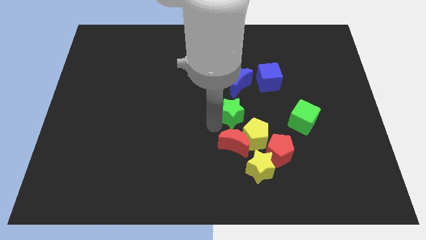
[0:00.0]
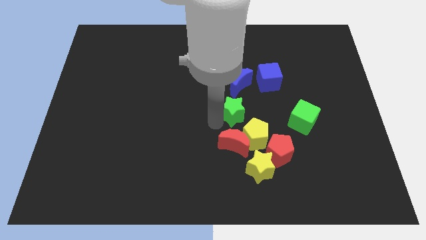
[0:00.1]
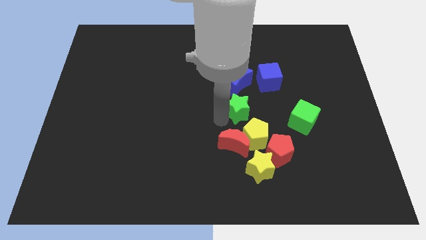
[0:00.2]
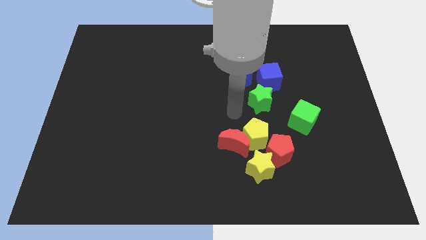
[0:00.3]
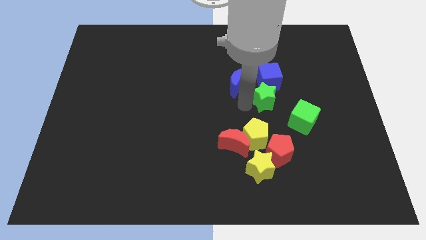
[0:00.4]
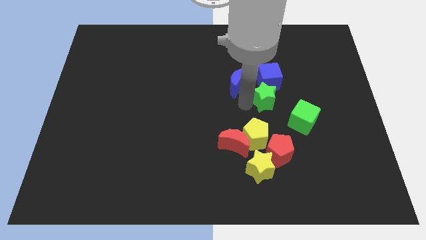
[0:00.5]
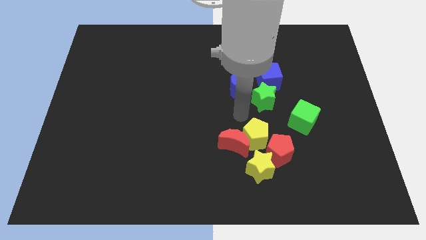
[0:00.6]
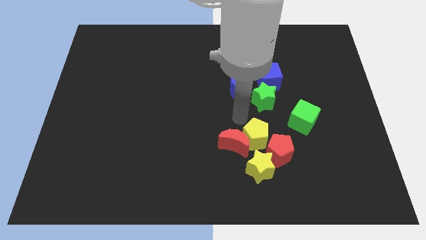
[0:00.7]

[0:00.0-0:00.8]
move the green star diagonally top right to yellow pentagon

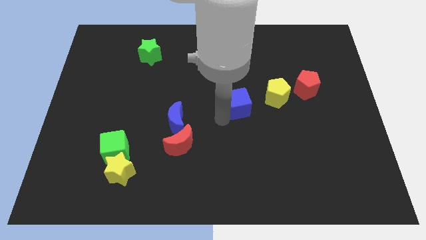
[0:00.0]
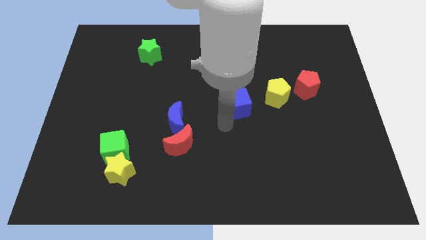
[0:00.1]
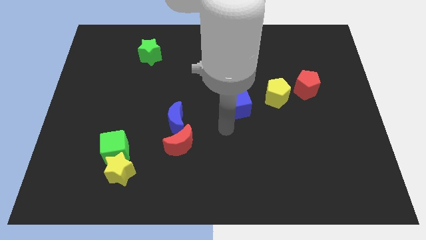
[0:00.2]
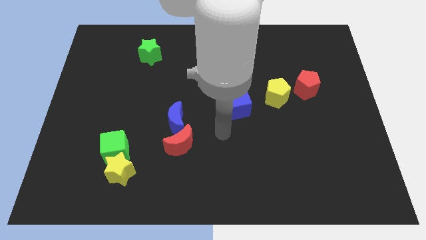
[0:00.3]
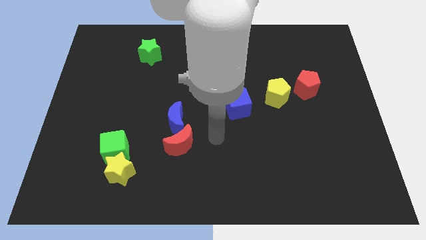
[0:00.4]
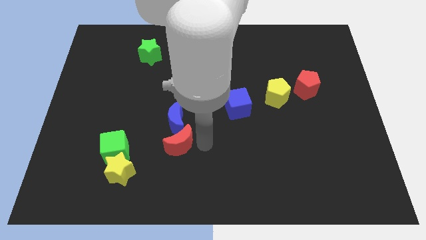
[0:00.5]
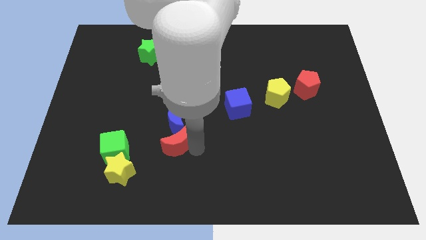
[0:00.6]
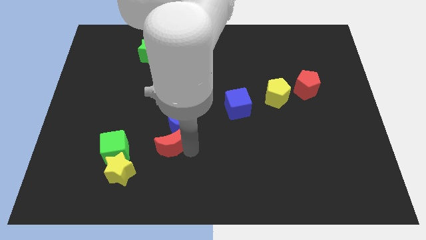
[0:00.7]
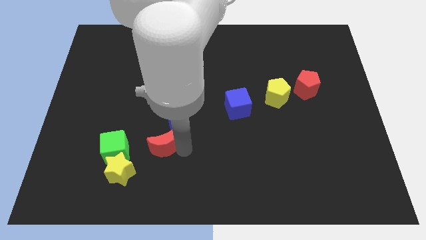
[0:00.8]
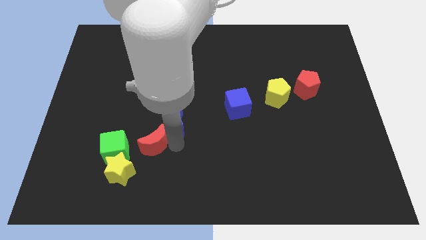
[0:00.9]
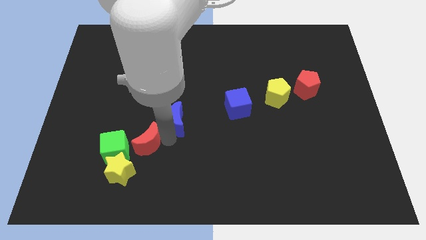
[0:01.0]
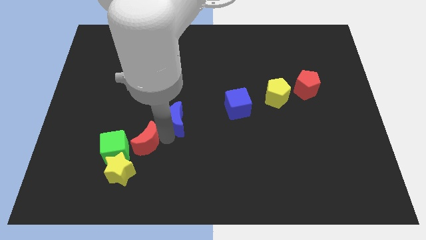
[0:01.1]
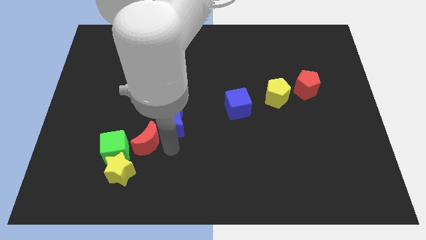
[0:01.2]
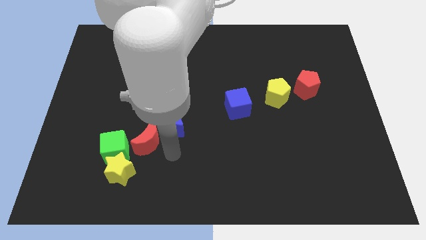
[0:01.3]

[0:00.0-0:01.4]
push the red moon right to the green cube

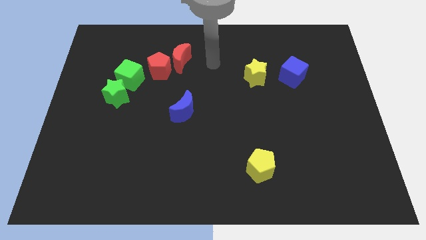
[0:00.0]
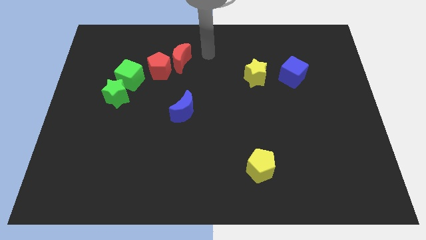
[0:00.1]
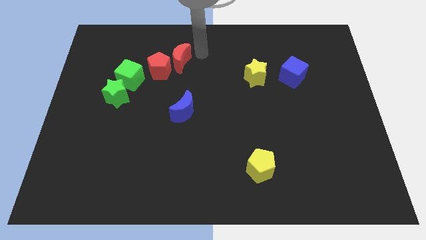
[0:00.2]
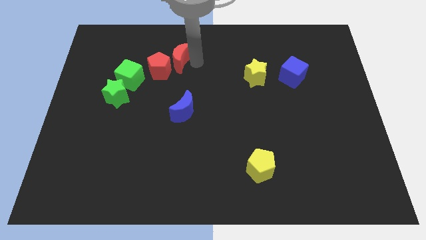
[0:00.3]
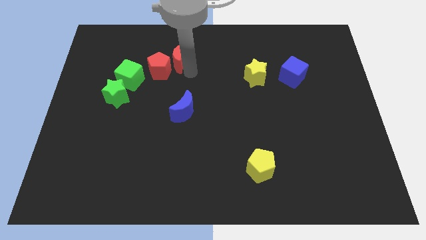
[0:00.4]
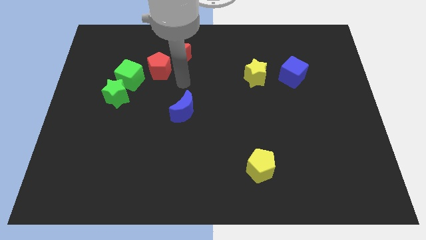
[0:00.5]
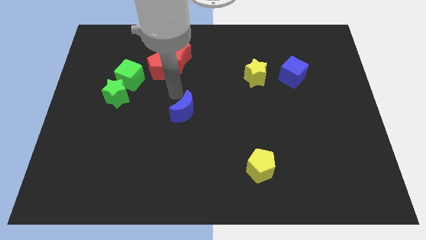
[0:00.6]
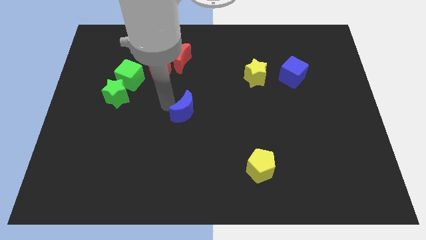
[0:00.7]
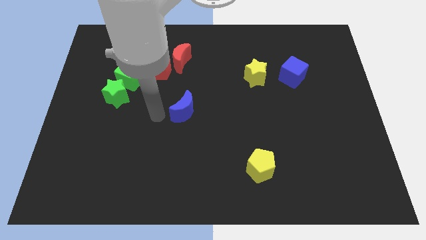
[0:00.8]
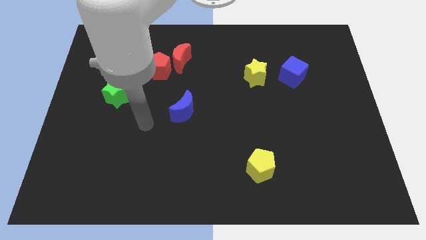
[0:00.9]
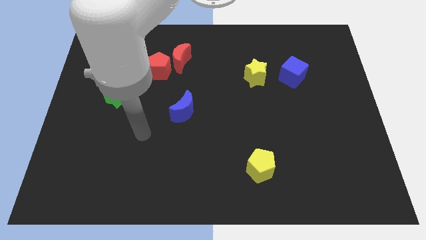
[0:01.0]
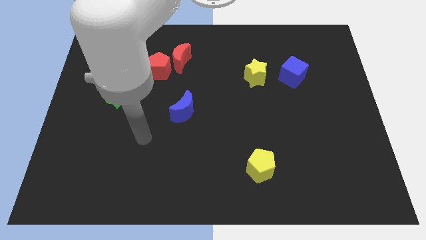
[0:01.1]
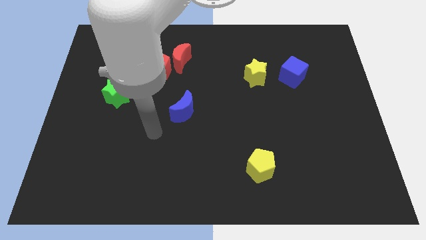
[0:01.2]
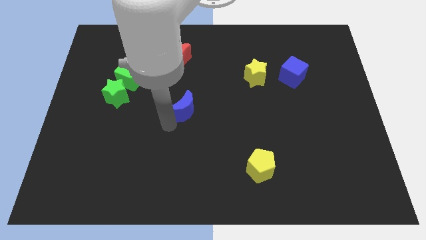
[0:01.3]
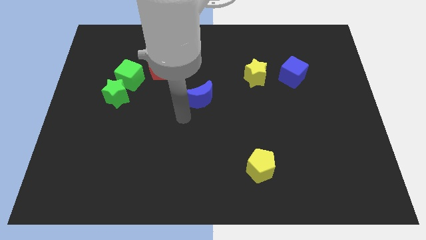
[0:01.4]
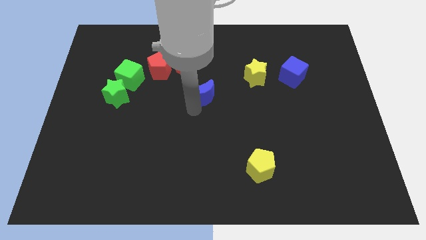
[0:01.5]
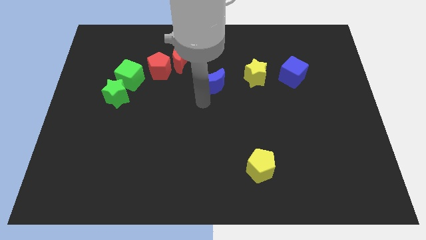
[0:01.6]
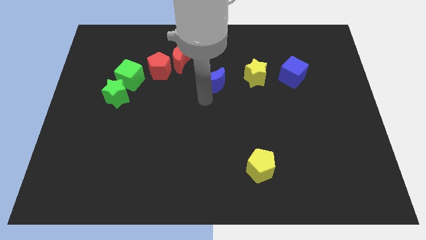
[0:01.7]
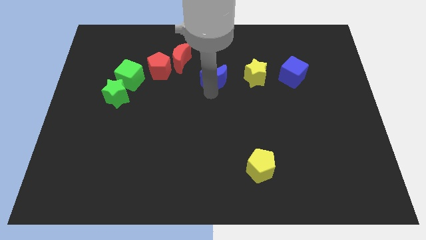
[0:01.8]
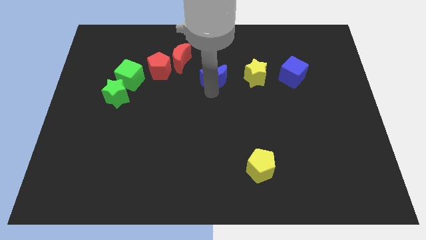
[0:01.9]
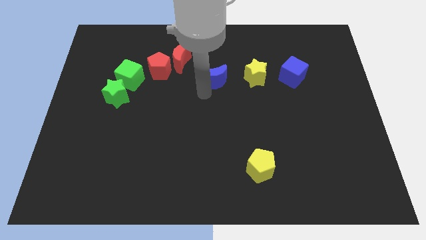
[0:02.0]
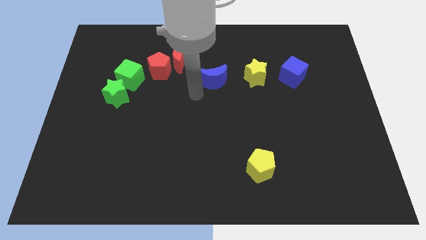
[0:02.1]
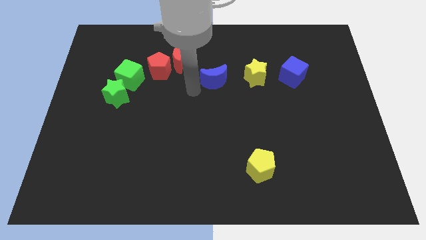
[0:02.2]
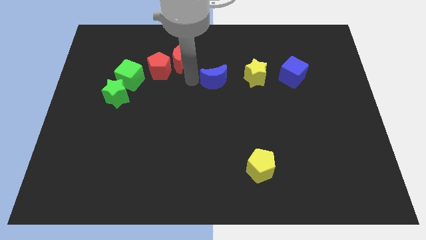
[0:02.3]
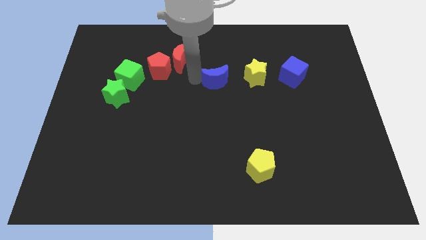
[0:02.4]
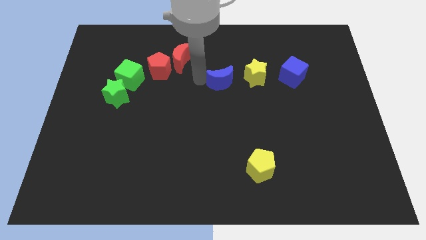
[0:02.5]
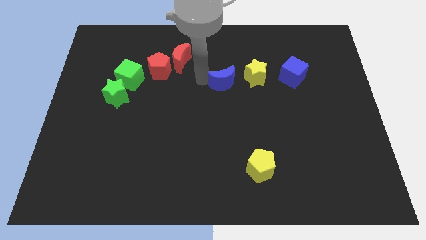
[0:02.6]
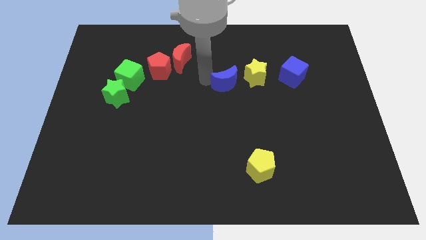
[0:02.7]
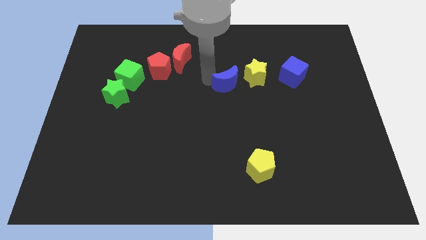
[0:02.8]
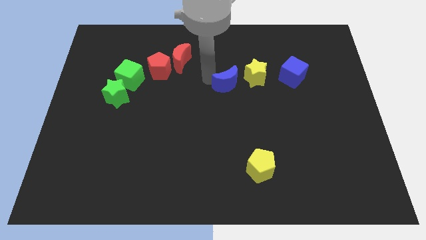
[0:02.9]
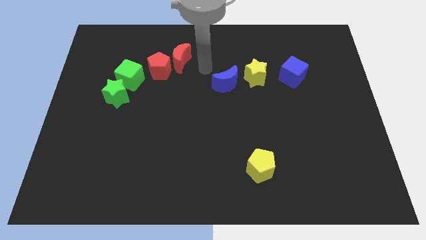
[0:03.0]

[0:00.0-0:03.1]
push the blue crescent to the left of the yellow star

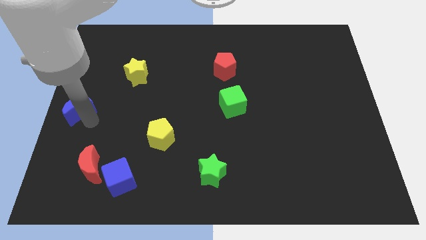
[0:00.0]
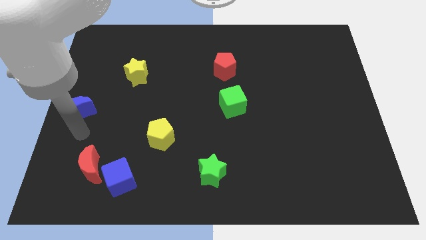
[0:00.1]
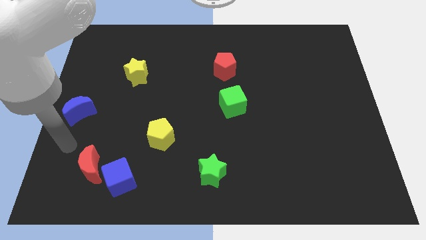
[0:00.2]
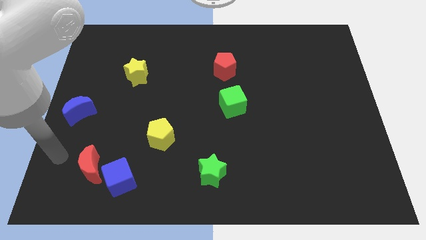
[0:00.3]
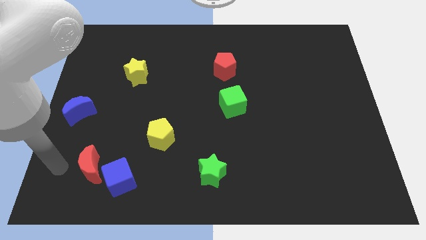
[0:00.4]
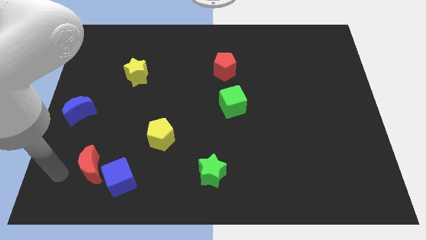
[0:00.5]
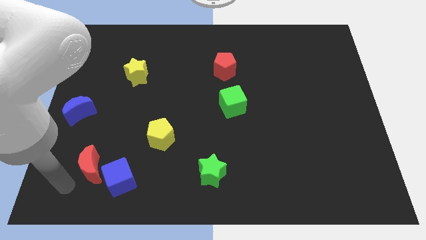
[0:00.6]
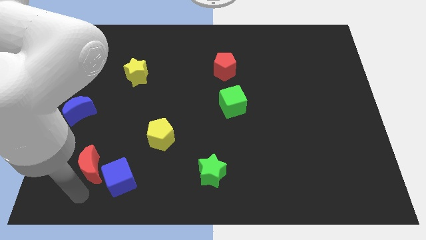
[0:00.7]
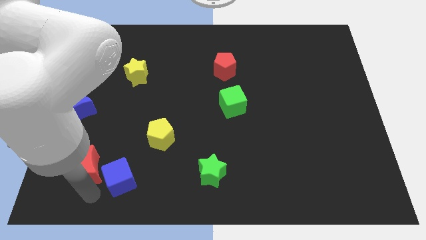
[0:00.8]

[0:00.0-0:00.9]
place your arm at the bottom of the red crescent

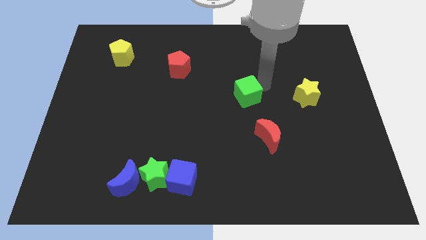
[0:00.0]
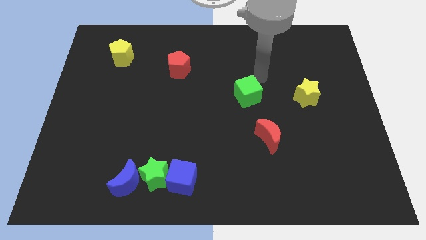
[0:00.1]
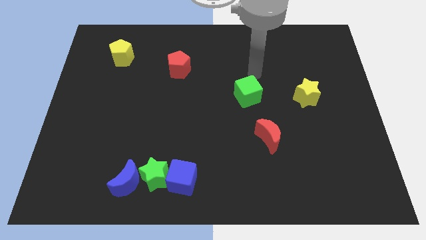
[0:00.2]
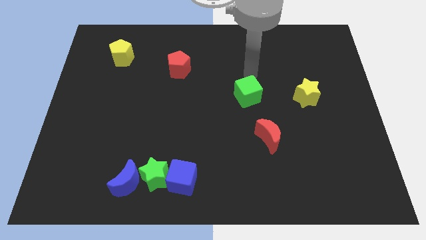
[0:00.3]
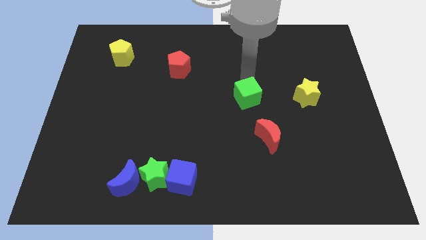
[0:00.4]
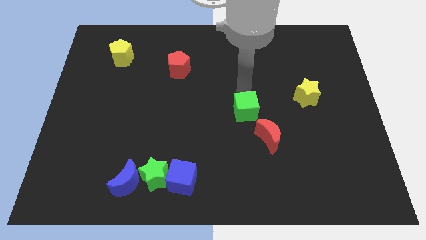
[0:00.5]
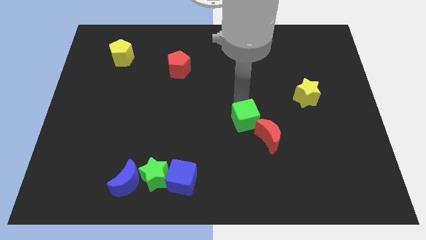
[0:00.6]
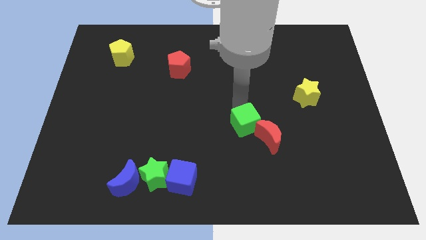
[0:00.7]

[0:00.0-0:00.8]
push the green cube into the top side of the red moon

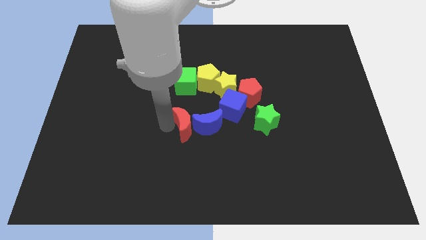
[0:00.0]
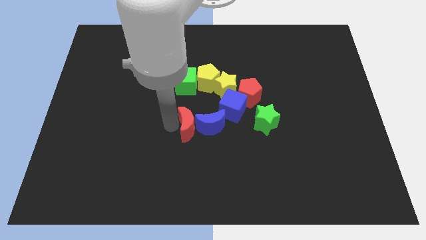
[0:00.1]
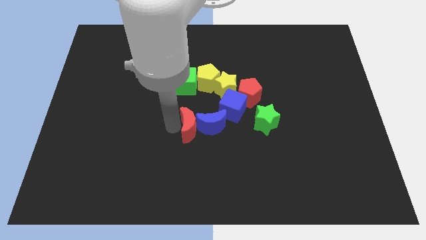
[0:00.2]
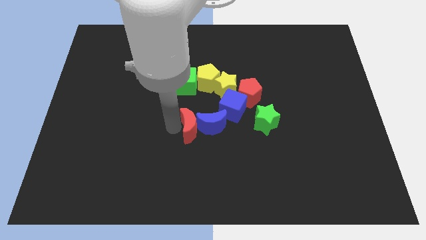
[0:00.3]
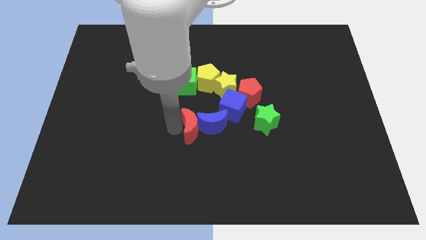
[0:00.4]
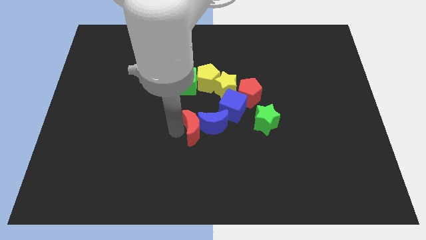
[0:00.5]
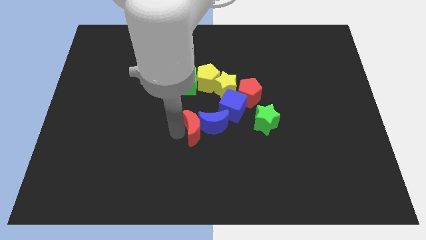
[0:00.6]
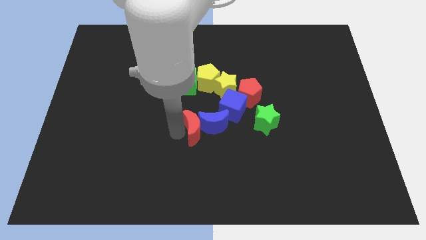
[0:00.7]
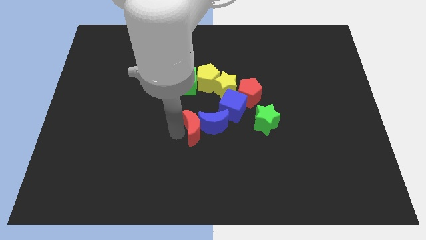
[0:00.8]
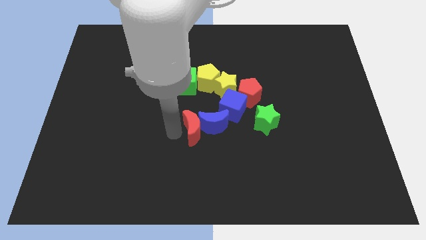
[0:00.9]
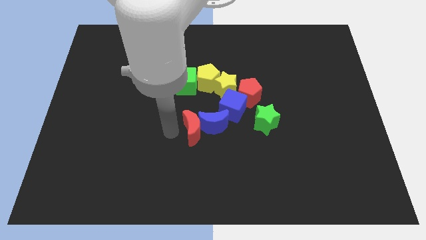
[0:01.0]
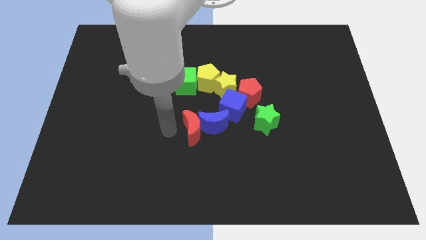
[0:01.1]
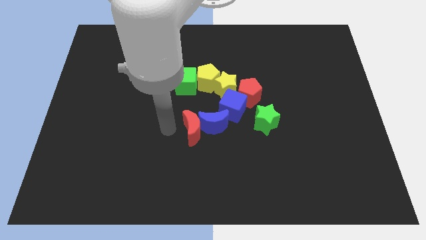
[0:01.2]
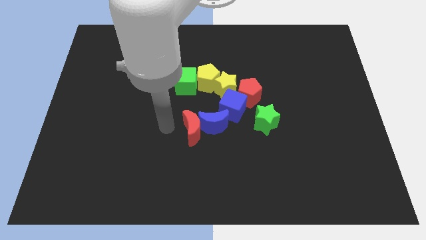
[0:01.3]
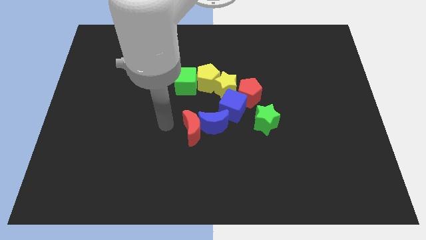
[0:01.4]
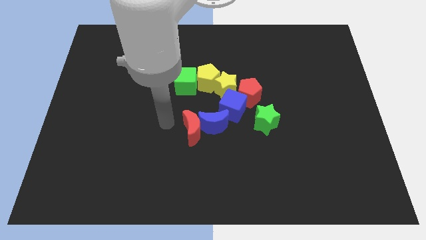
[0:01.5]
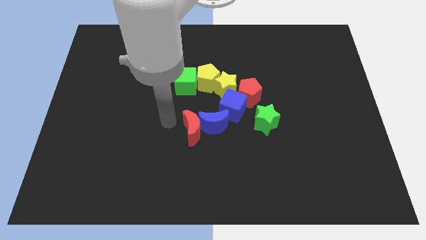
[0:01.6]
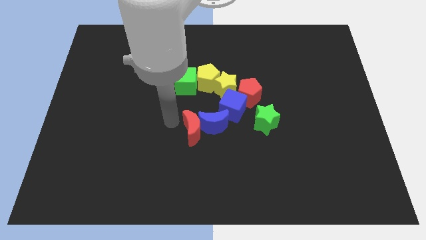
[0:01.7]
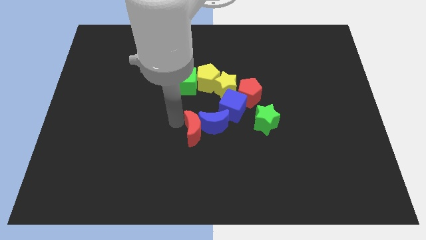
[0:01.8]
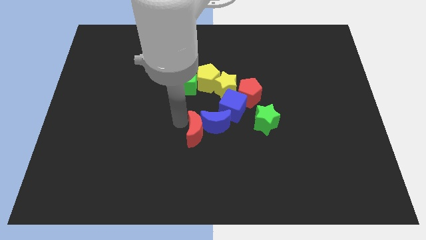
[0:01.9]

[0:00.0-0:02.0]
place the red moon to left side of blue moon
